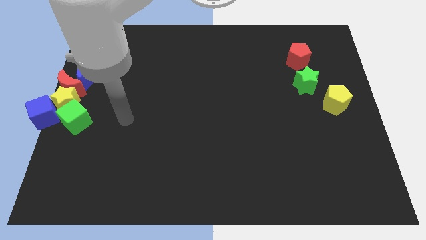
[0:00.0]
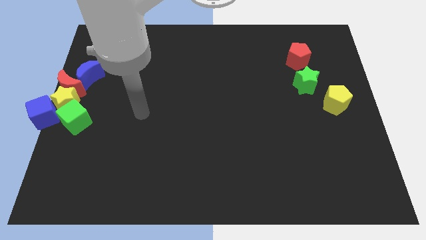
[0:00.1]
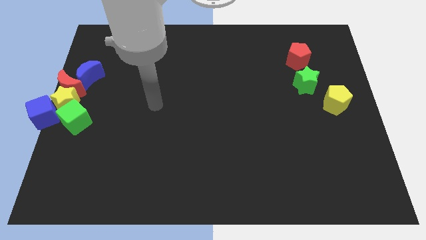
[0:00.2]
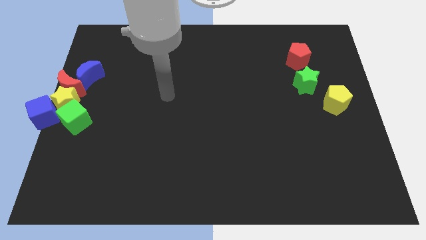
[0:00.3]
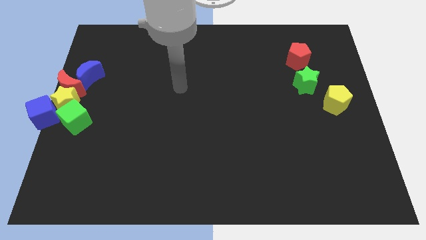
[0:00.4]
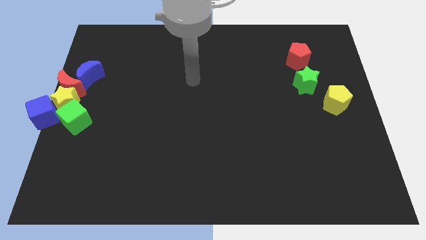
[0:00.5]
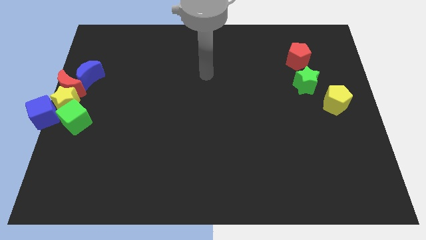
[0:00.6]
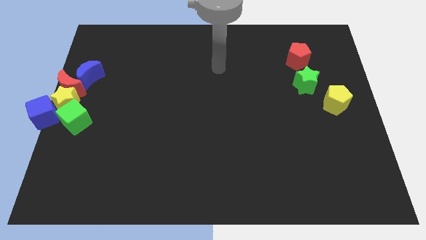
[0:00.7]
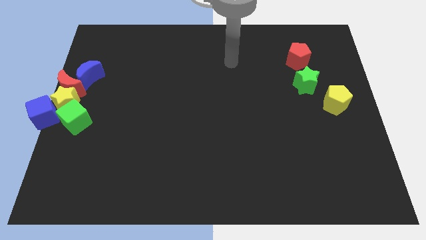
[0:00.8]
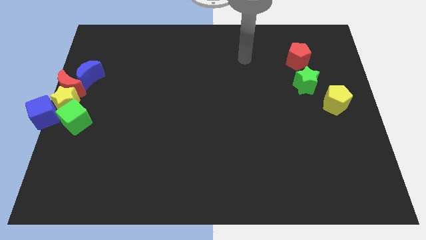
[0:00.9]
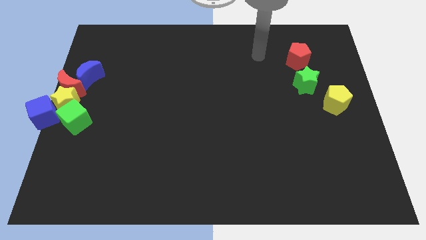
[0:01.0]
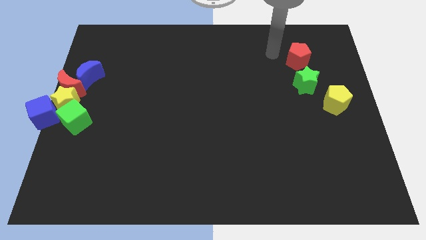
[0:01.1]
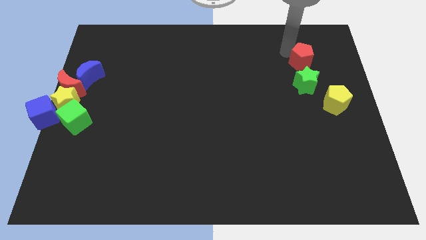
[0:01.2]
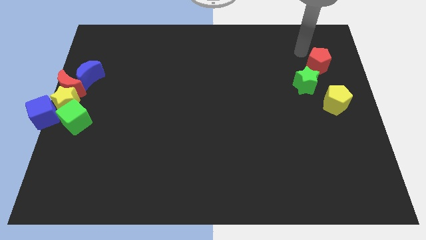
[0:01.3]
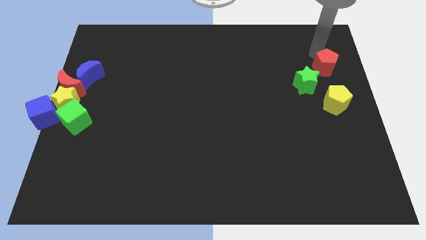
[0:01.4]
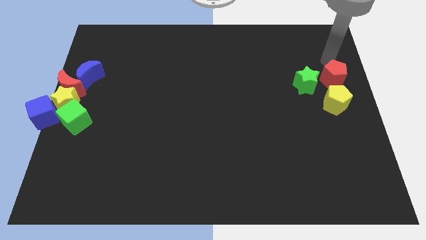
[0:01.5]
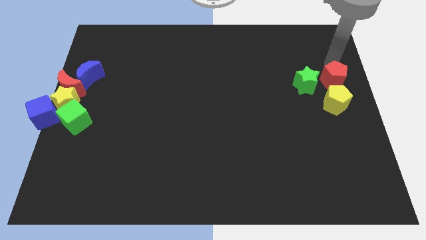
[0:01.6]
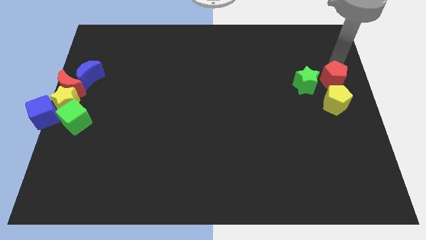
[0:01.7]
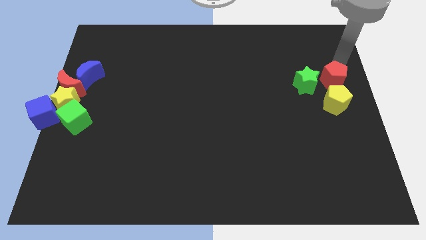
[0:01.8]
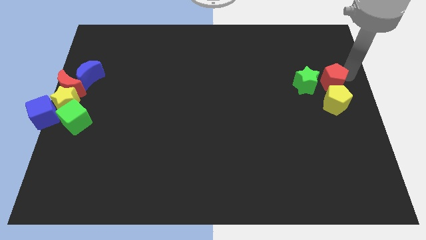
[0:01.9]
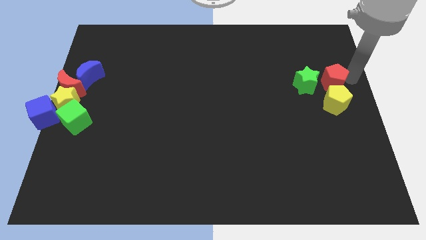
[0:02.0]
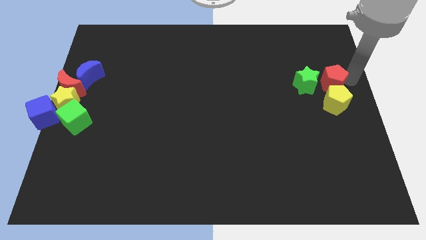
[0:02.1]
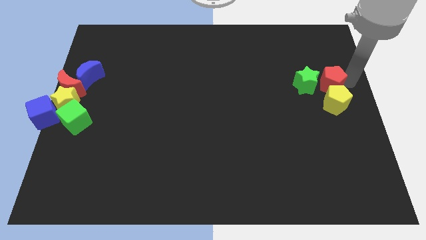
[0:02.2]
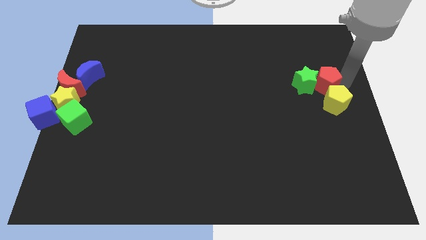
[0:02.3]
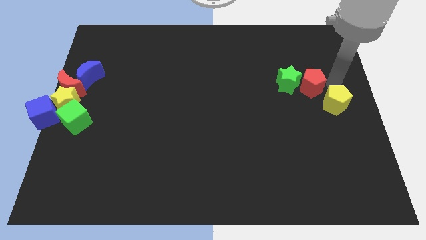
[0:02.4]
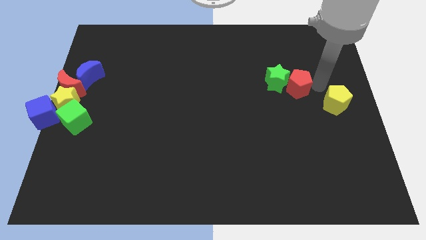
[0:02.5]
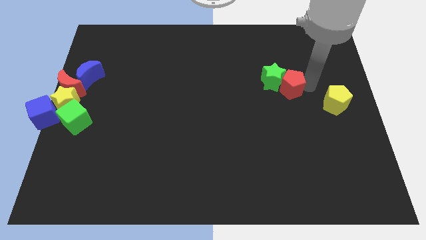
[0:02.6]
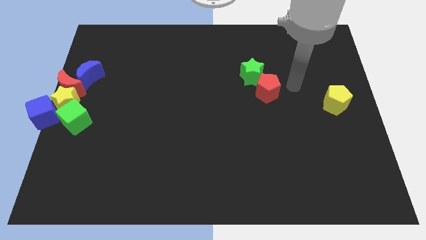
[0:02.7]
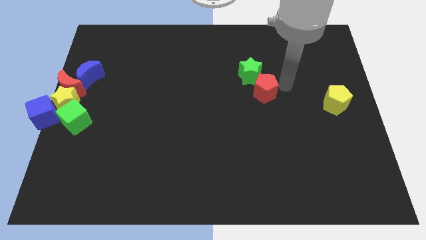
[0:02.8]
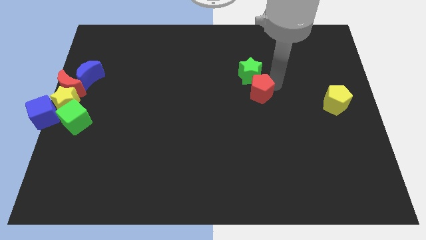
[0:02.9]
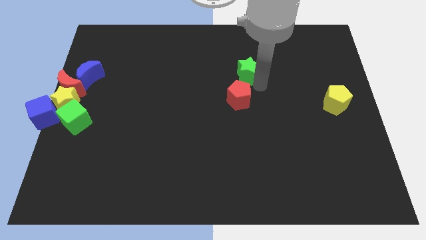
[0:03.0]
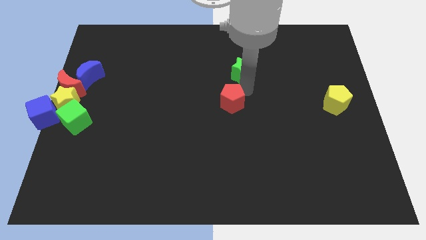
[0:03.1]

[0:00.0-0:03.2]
drag the red pentagon and green star towards the group of blocks

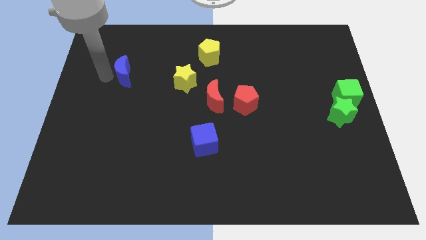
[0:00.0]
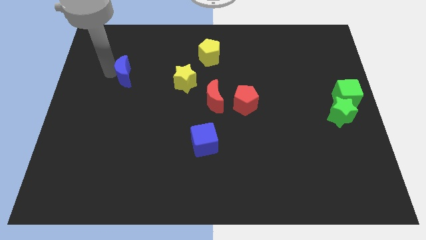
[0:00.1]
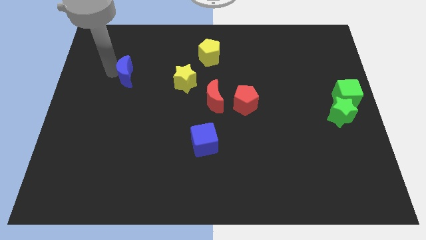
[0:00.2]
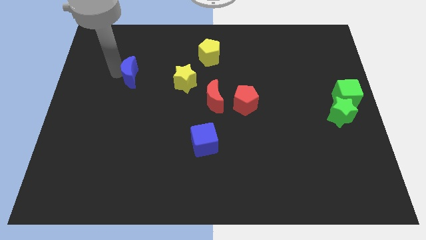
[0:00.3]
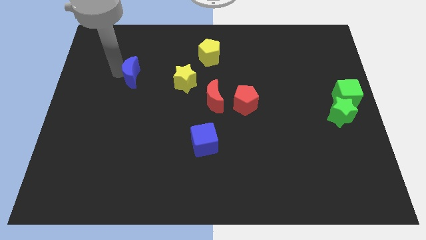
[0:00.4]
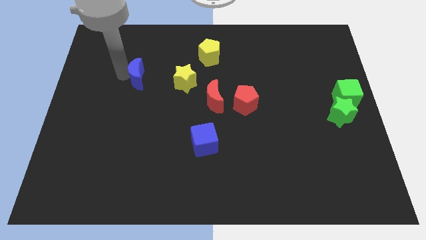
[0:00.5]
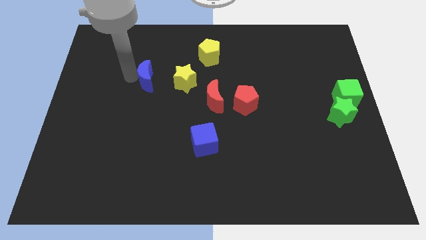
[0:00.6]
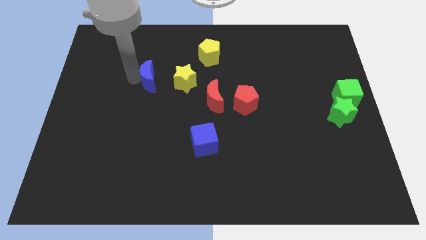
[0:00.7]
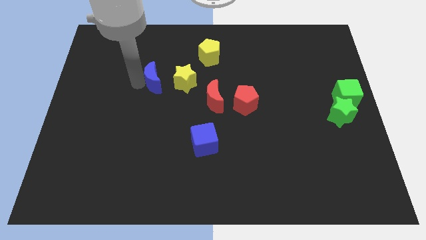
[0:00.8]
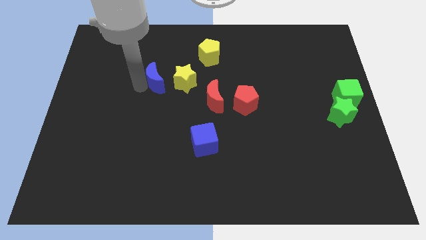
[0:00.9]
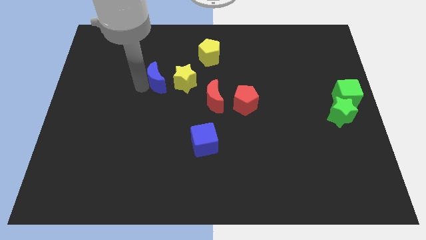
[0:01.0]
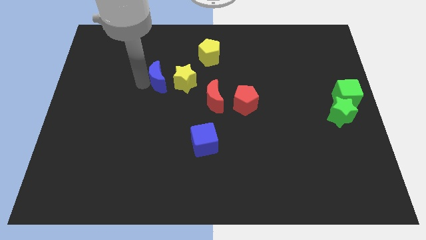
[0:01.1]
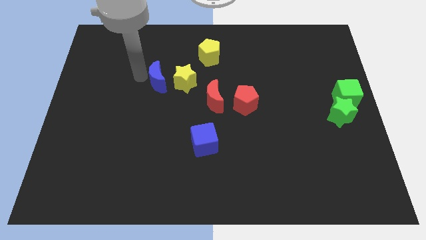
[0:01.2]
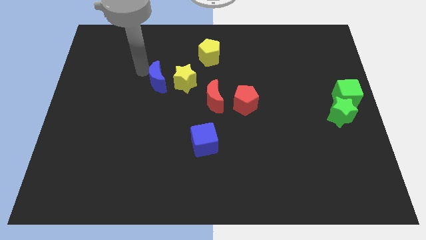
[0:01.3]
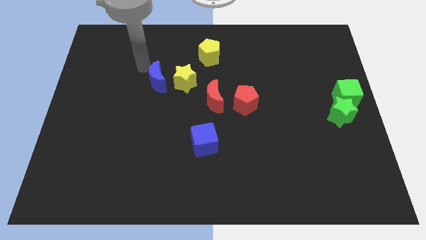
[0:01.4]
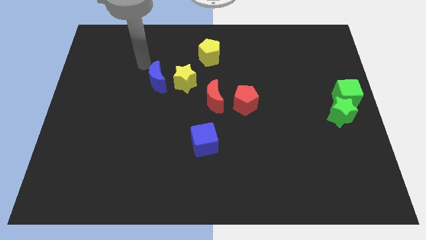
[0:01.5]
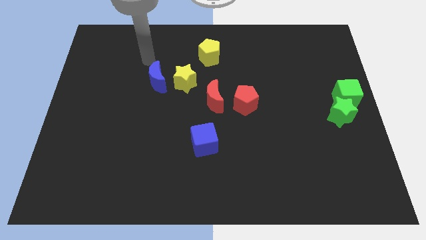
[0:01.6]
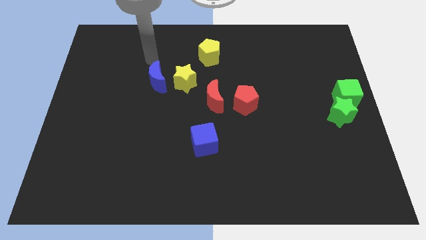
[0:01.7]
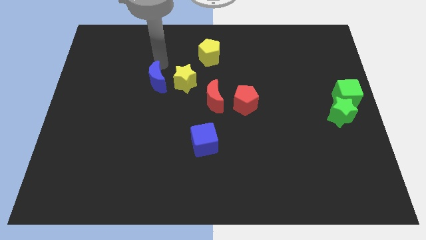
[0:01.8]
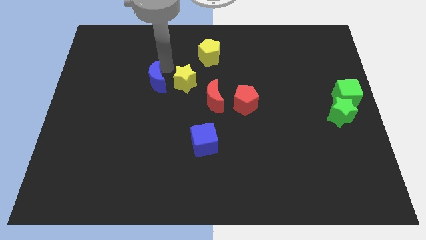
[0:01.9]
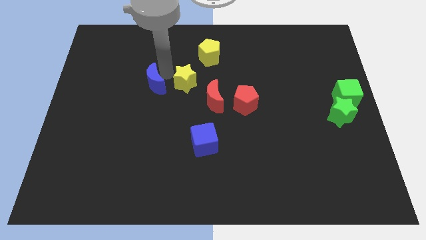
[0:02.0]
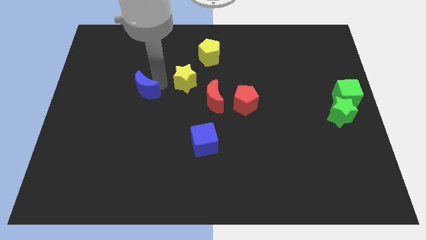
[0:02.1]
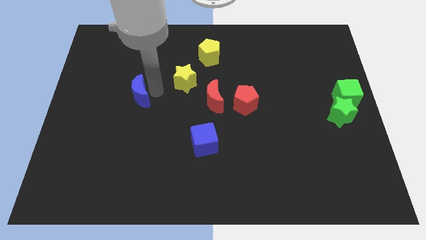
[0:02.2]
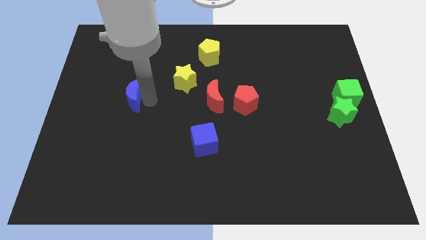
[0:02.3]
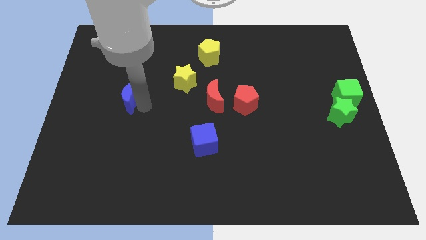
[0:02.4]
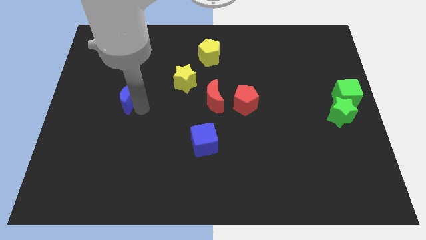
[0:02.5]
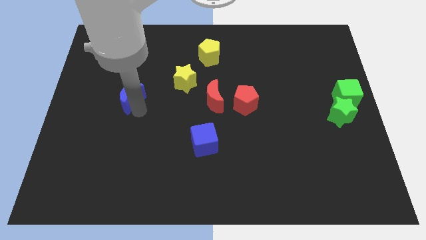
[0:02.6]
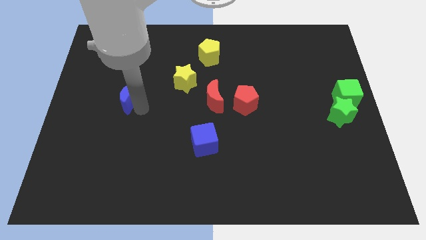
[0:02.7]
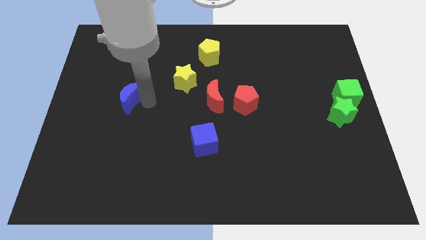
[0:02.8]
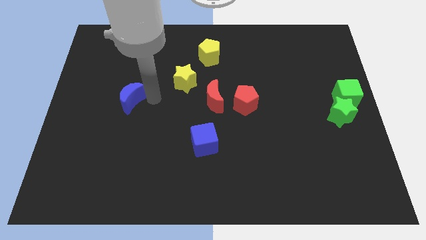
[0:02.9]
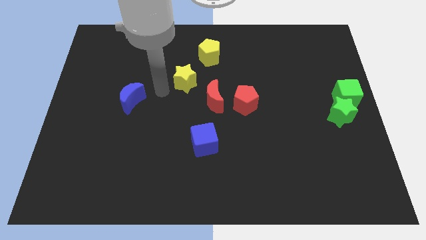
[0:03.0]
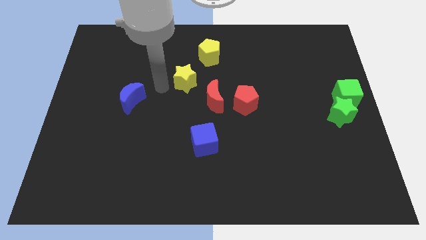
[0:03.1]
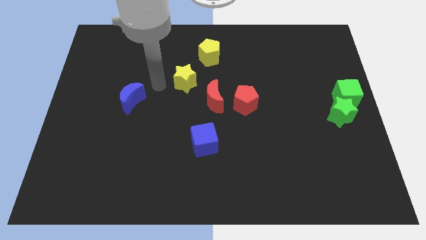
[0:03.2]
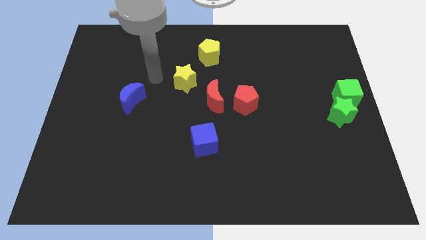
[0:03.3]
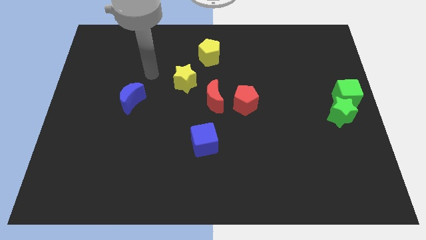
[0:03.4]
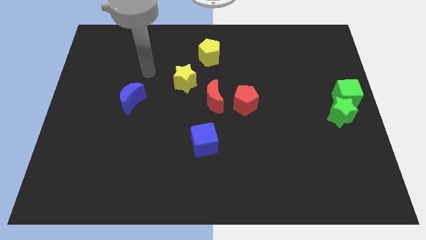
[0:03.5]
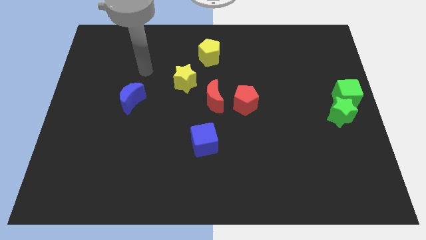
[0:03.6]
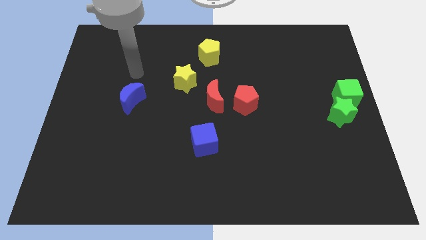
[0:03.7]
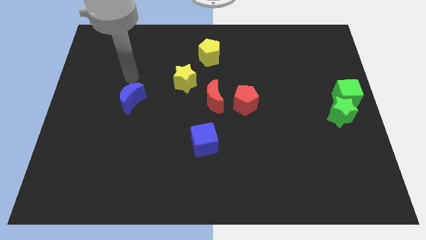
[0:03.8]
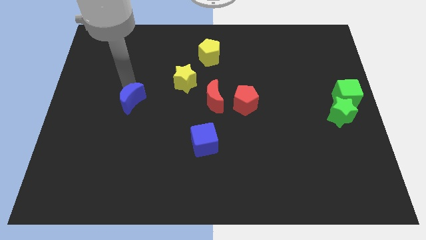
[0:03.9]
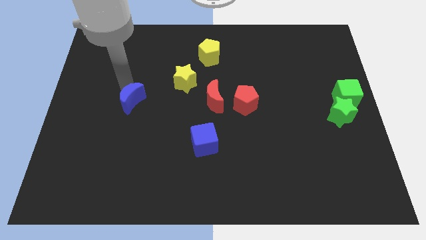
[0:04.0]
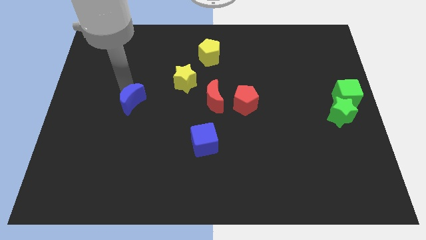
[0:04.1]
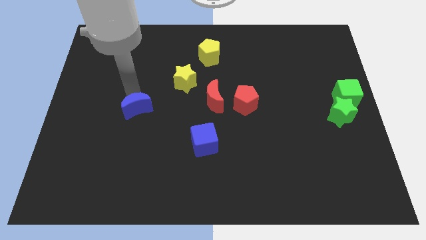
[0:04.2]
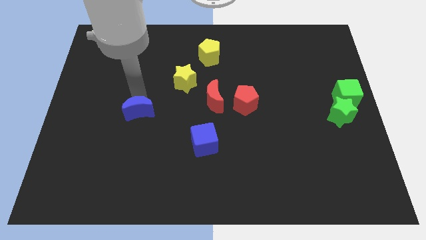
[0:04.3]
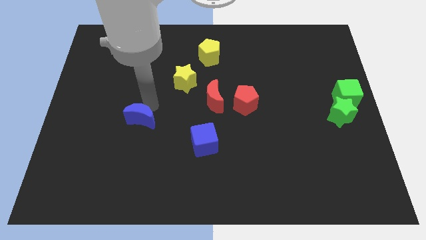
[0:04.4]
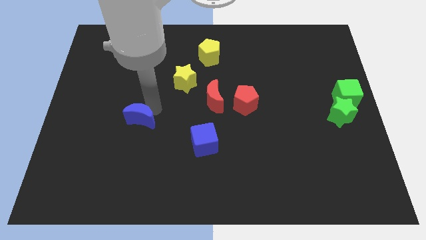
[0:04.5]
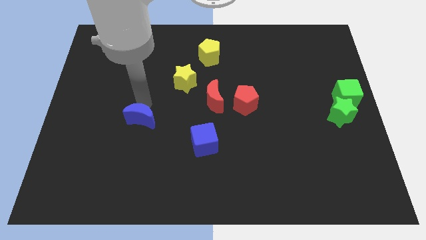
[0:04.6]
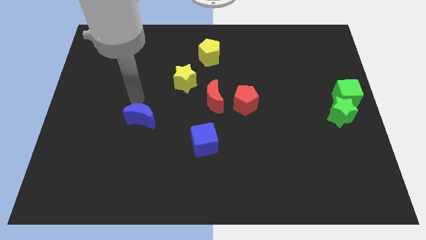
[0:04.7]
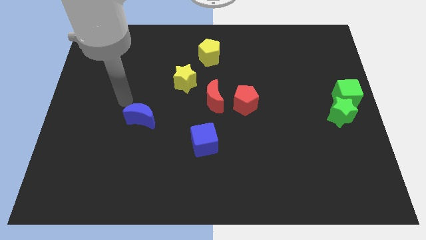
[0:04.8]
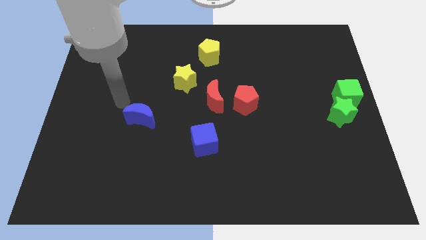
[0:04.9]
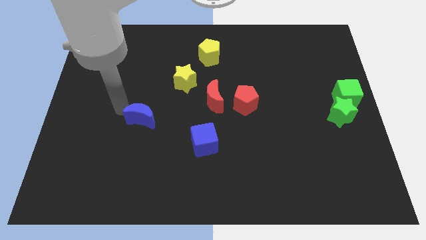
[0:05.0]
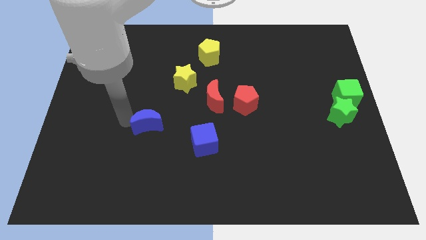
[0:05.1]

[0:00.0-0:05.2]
push the blue crescent to the bottom of the board

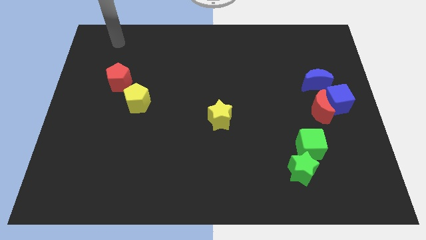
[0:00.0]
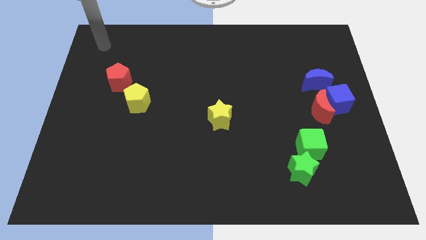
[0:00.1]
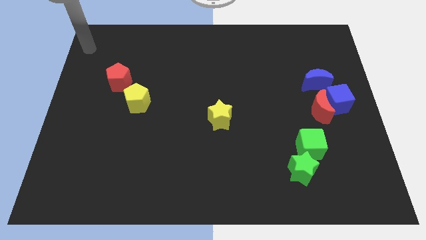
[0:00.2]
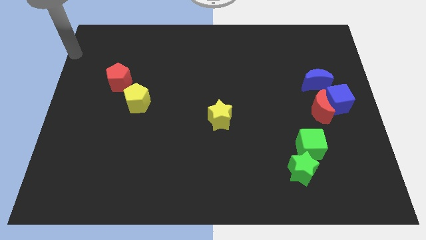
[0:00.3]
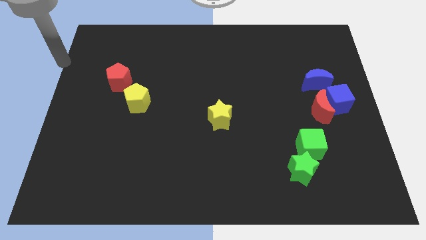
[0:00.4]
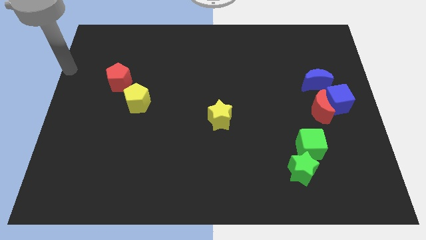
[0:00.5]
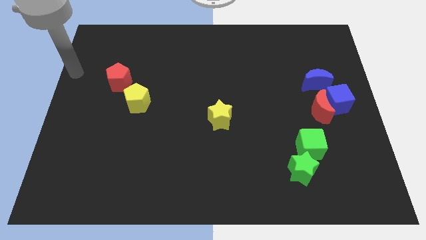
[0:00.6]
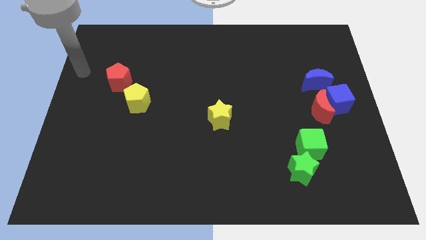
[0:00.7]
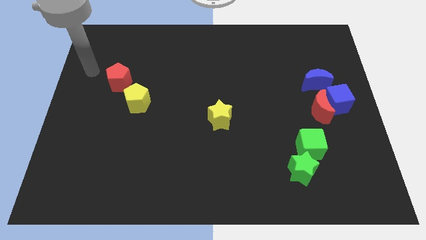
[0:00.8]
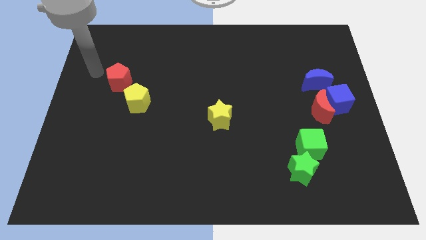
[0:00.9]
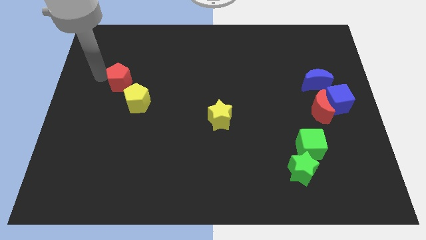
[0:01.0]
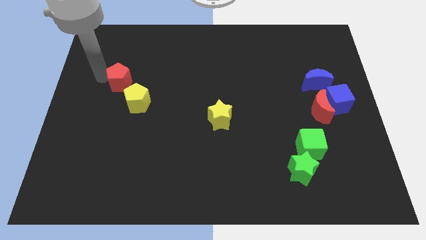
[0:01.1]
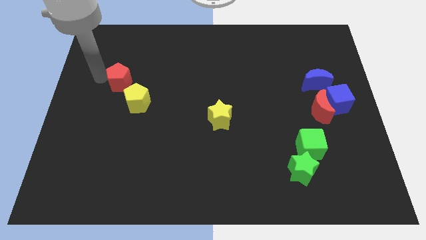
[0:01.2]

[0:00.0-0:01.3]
place your arm left to the red pentagon
